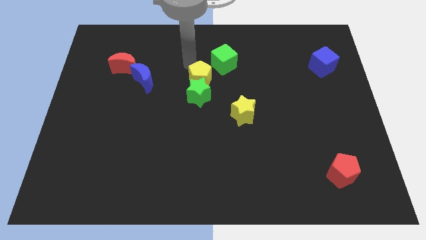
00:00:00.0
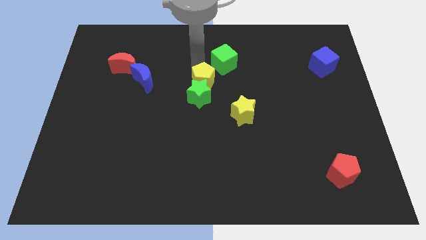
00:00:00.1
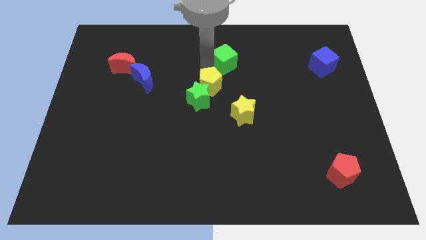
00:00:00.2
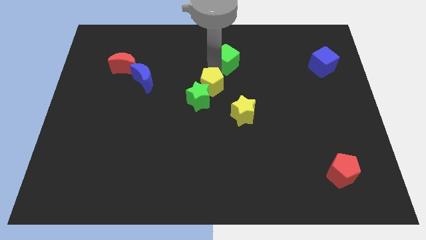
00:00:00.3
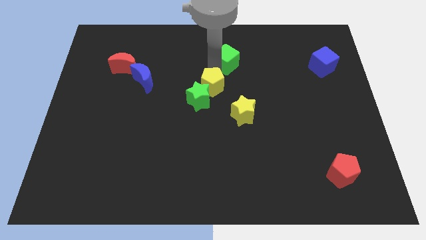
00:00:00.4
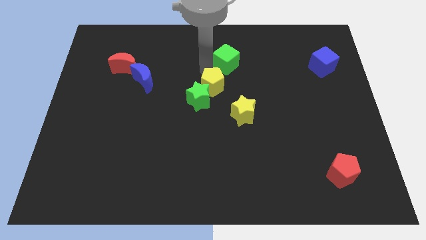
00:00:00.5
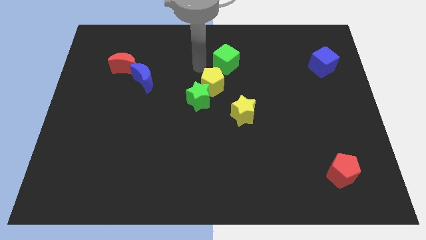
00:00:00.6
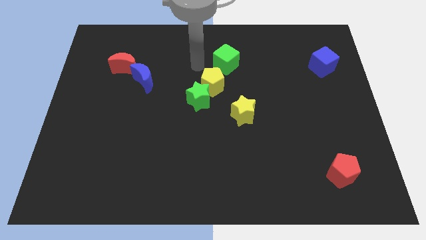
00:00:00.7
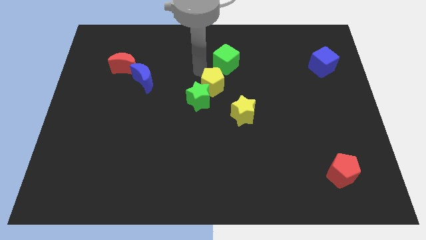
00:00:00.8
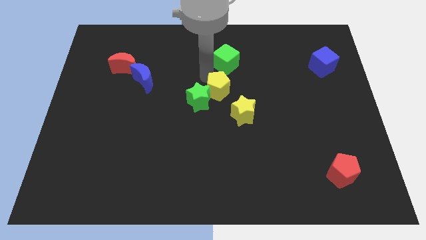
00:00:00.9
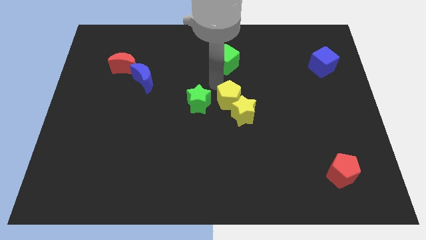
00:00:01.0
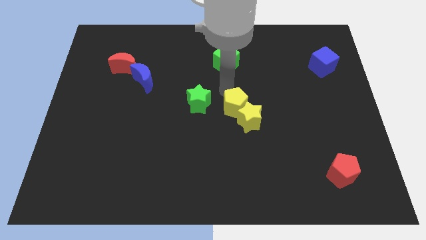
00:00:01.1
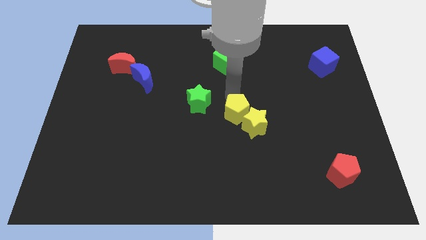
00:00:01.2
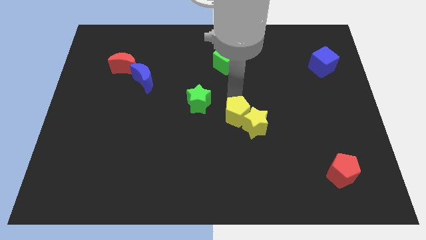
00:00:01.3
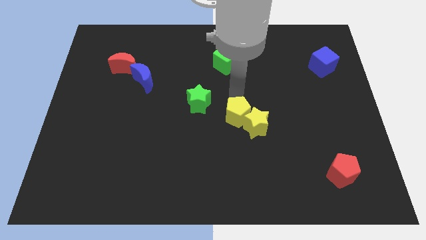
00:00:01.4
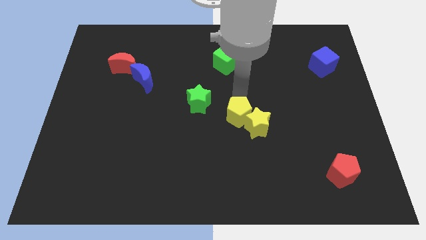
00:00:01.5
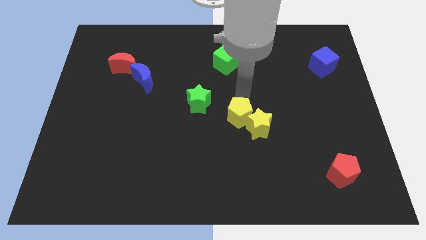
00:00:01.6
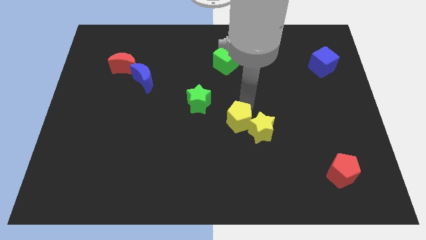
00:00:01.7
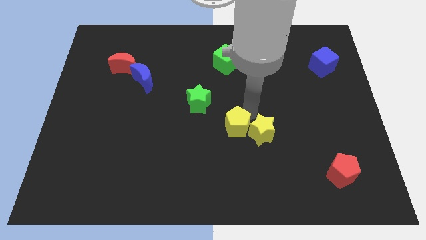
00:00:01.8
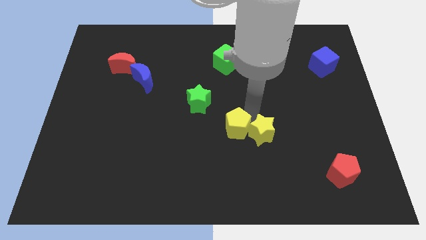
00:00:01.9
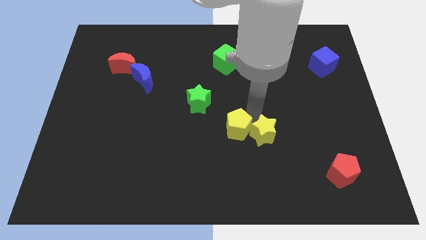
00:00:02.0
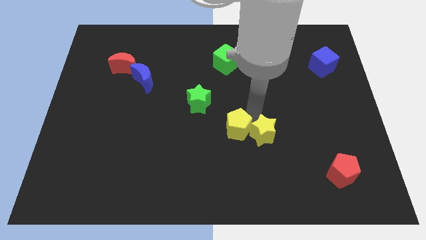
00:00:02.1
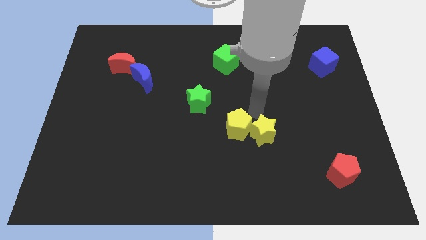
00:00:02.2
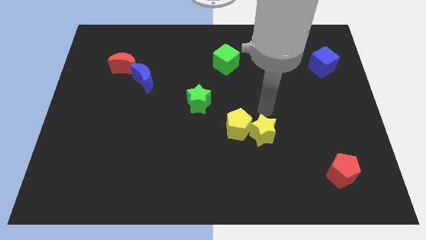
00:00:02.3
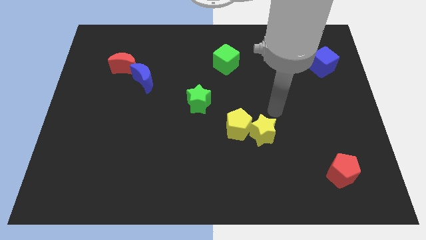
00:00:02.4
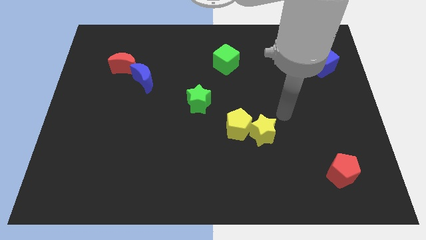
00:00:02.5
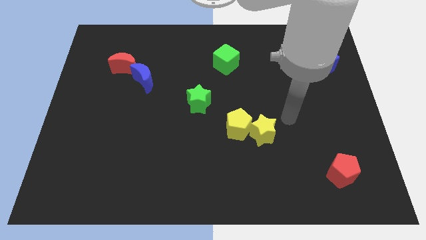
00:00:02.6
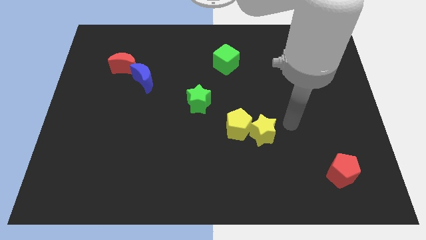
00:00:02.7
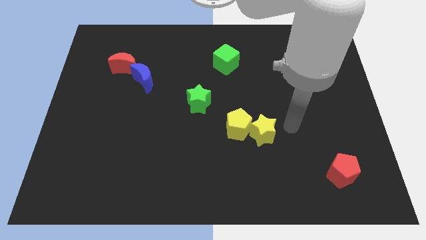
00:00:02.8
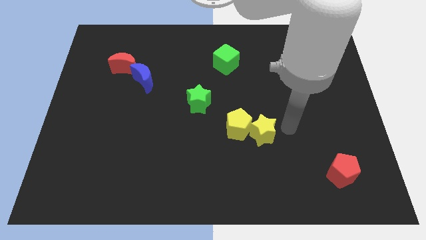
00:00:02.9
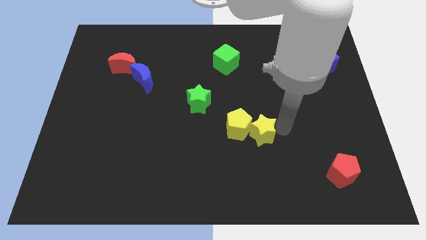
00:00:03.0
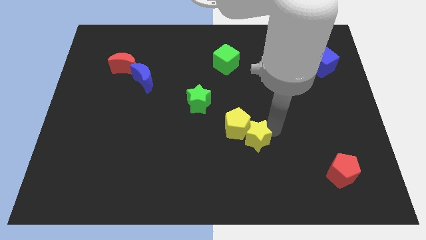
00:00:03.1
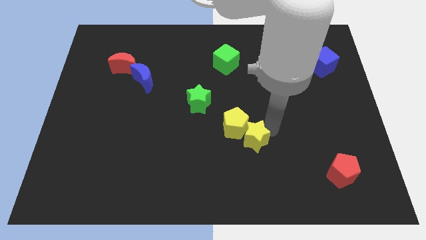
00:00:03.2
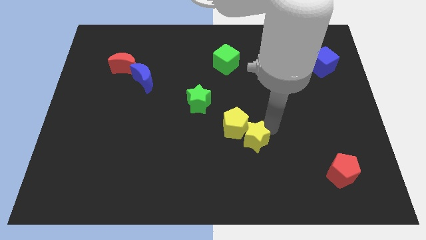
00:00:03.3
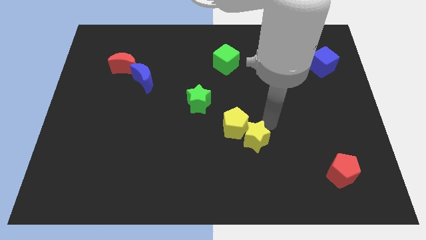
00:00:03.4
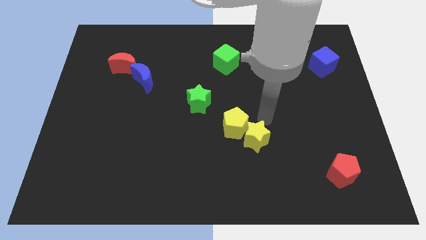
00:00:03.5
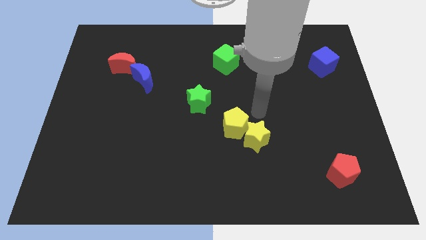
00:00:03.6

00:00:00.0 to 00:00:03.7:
push both the yellow blocks at the bottom right side of the green star

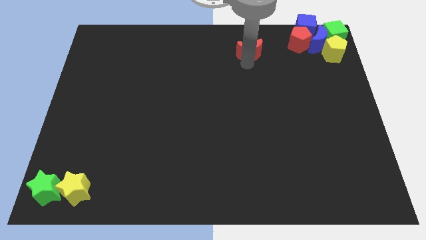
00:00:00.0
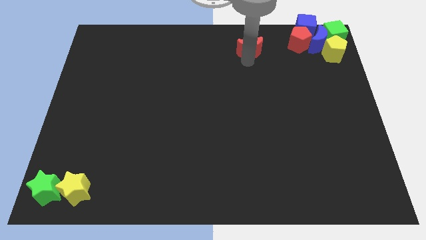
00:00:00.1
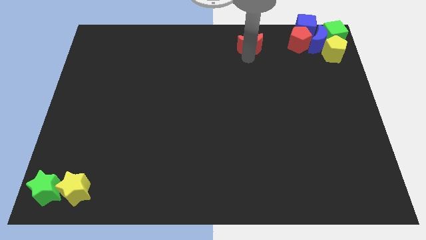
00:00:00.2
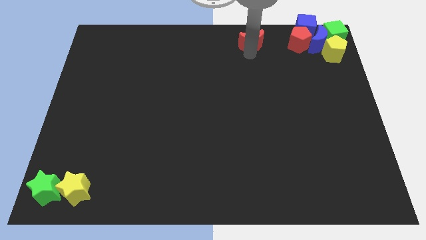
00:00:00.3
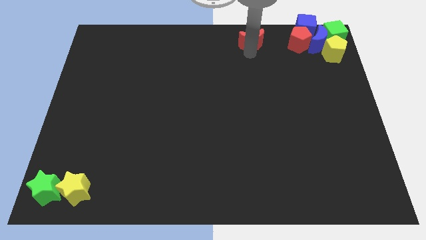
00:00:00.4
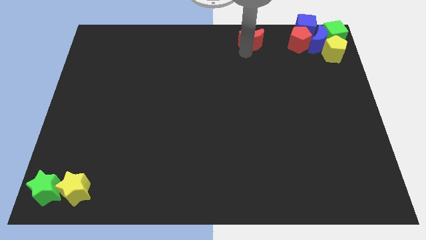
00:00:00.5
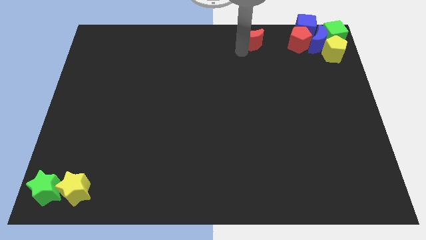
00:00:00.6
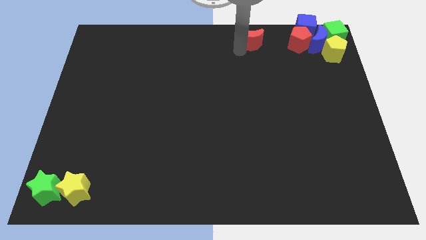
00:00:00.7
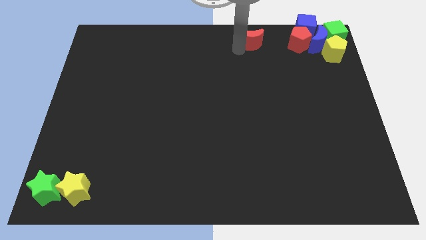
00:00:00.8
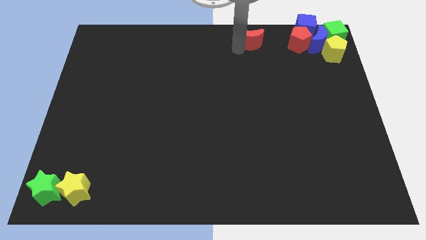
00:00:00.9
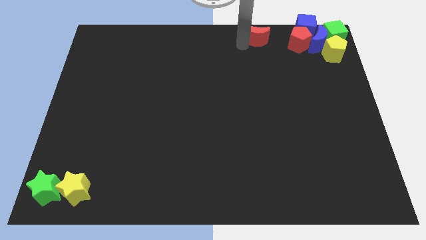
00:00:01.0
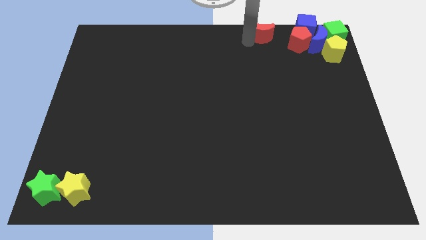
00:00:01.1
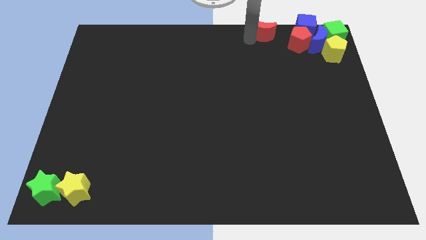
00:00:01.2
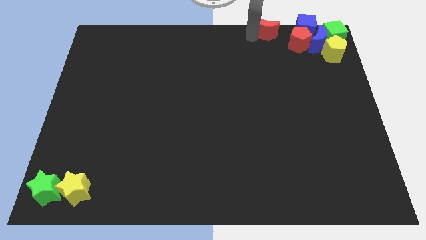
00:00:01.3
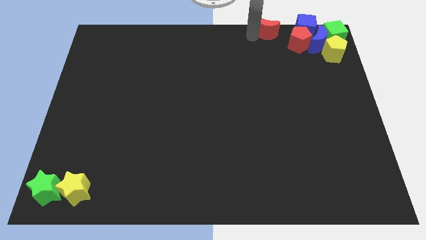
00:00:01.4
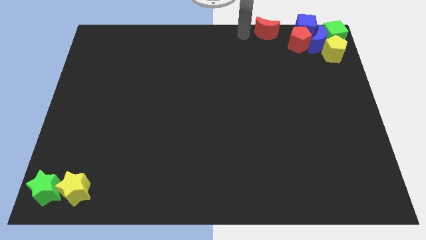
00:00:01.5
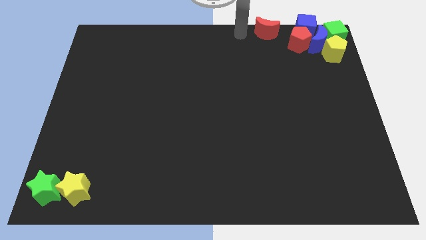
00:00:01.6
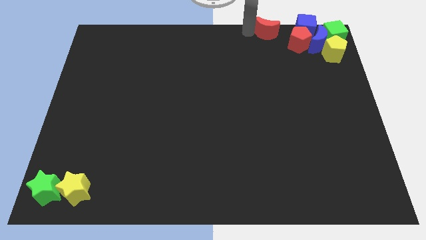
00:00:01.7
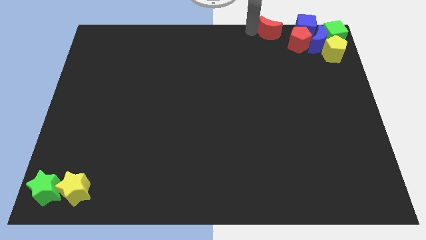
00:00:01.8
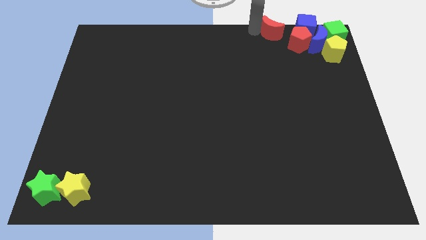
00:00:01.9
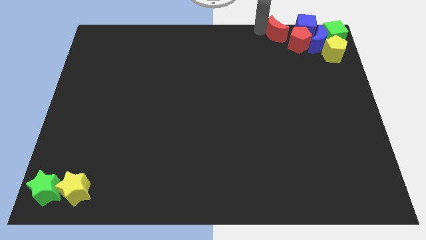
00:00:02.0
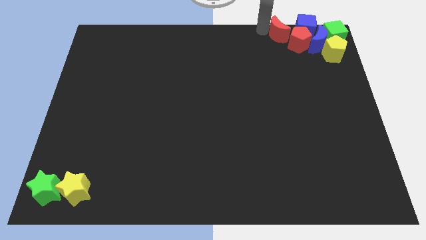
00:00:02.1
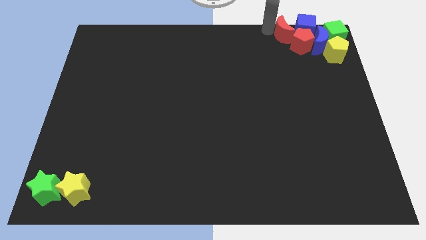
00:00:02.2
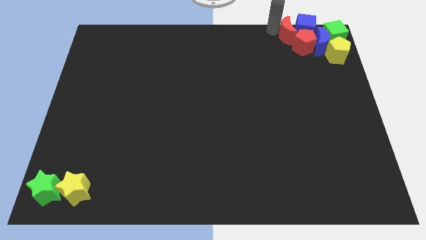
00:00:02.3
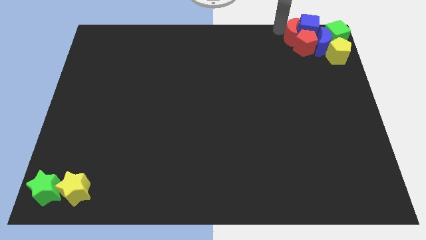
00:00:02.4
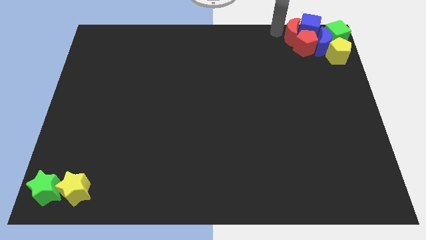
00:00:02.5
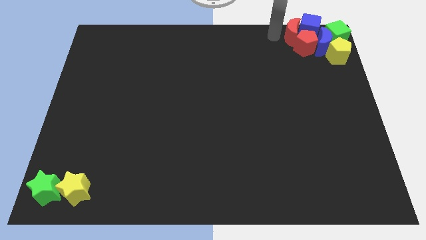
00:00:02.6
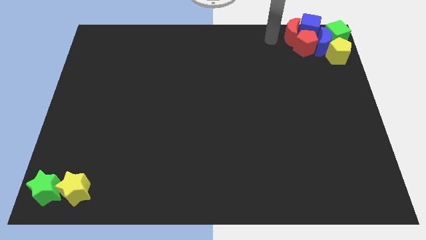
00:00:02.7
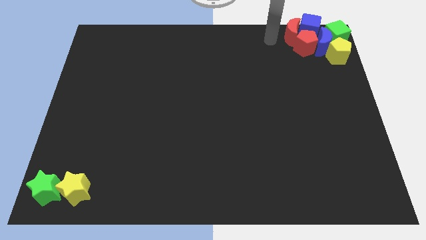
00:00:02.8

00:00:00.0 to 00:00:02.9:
move red moon into the group of blocks

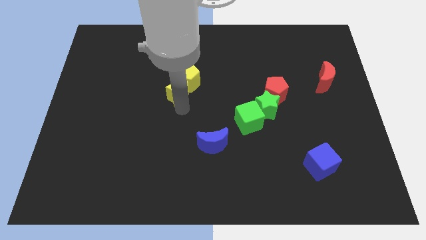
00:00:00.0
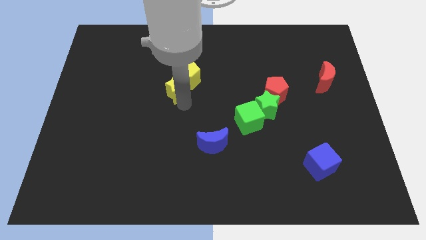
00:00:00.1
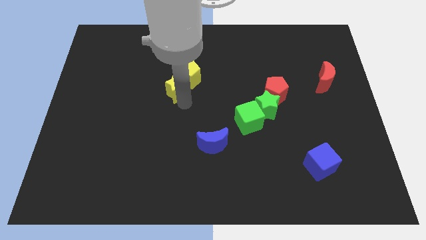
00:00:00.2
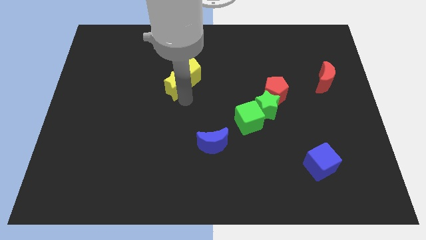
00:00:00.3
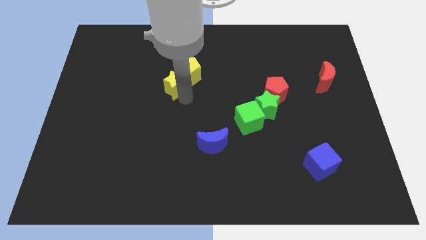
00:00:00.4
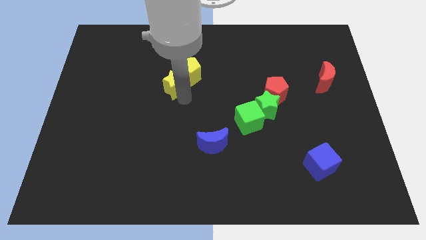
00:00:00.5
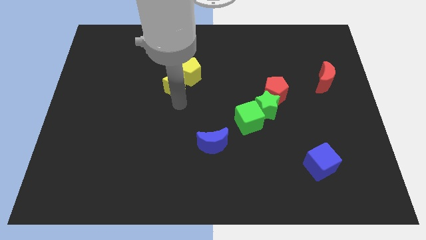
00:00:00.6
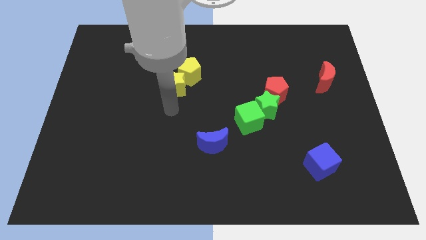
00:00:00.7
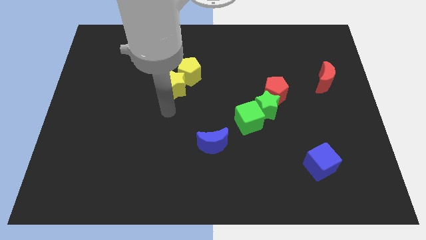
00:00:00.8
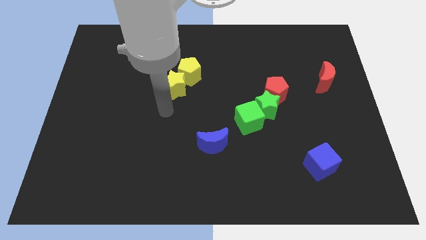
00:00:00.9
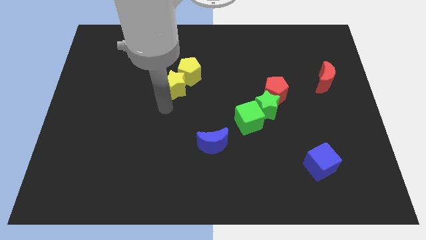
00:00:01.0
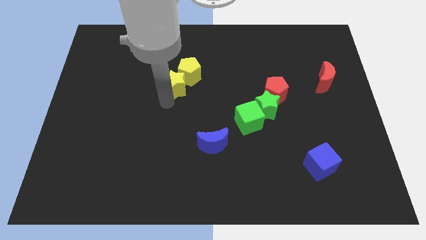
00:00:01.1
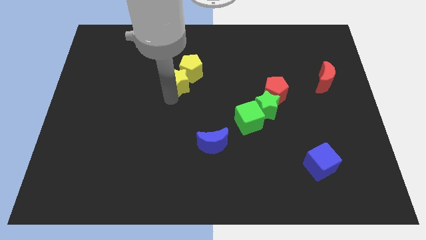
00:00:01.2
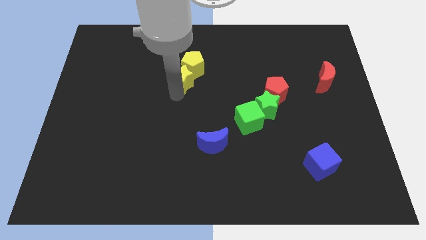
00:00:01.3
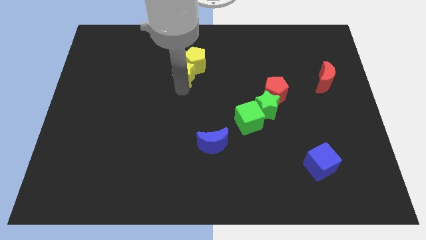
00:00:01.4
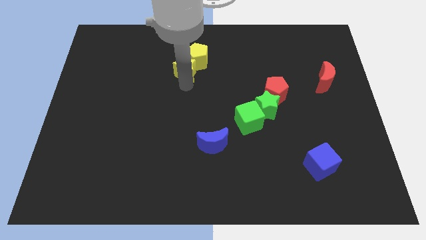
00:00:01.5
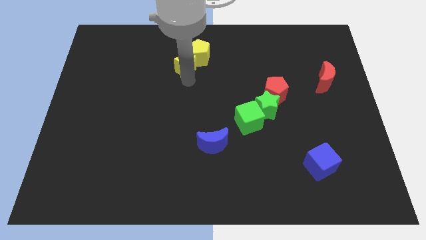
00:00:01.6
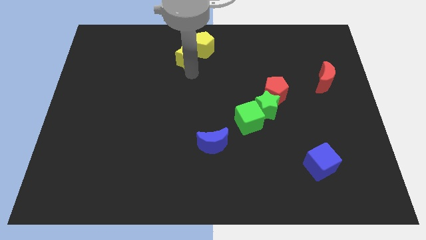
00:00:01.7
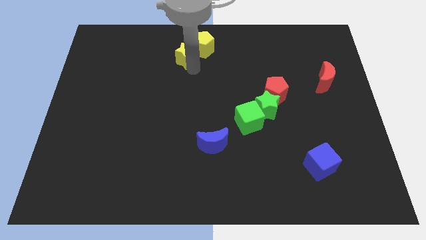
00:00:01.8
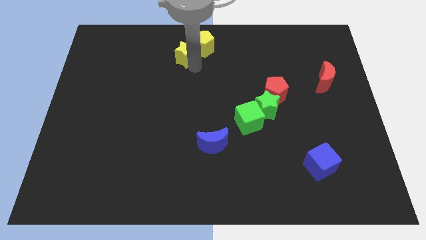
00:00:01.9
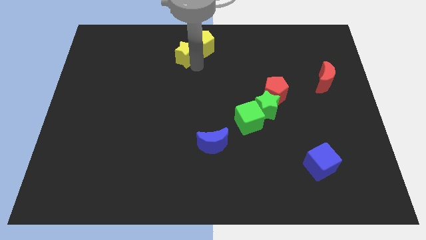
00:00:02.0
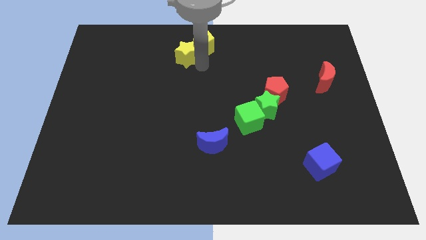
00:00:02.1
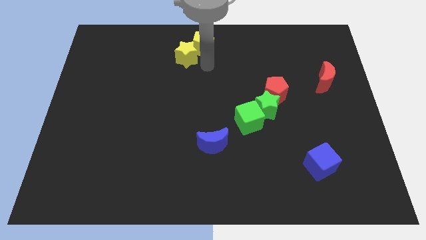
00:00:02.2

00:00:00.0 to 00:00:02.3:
push the yellow blocks towards the top center

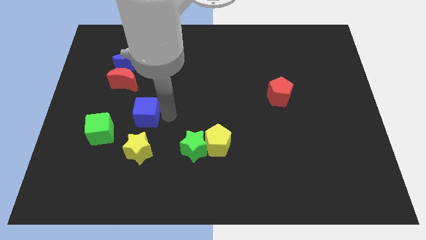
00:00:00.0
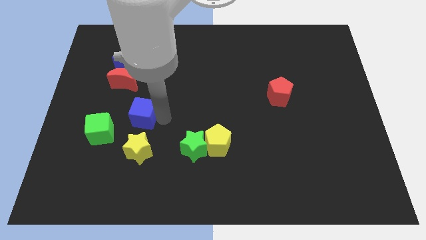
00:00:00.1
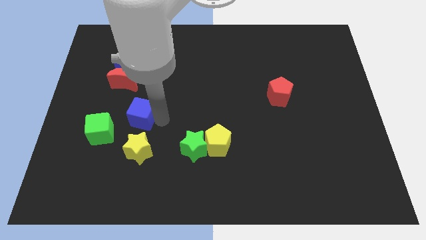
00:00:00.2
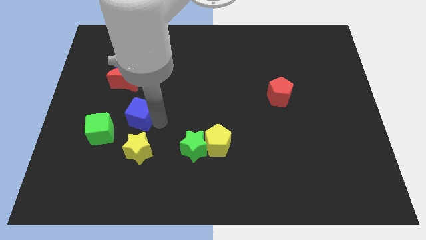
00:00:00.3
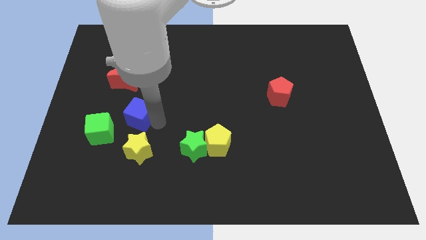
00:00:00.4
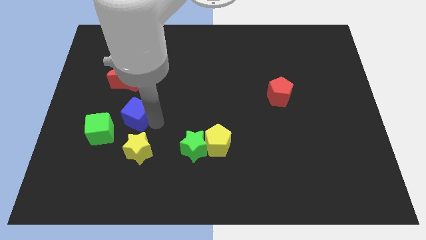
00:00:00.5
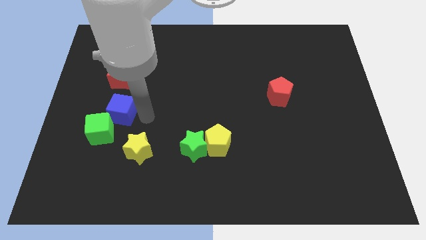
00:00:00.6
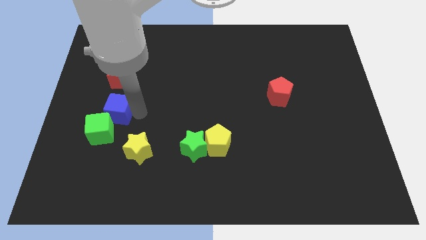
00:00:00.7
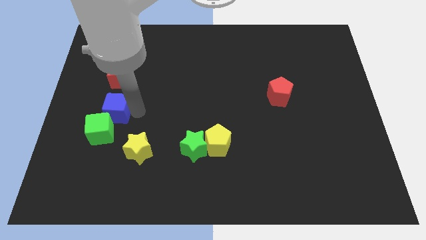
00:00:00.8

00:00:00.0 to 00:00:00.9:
slide blue cube on top right to green cube
